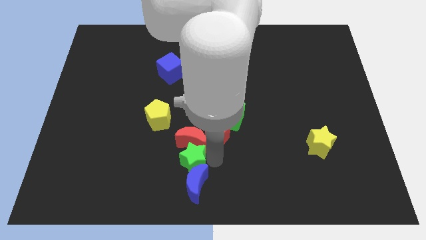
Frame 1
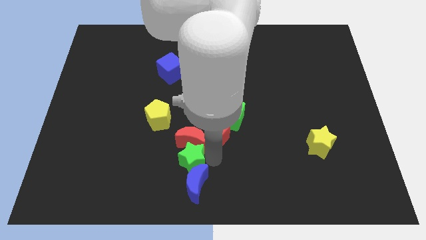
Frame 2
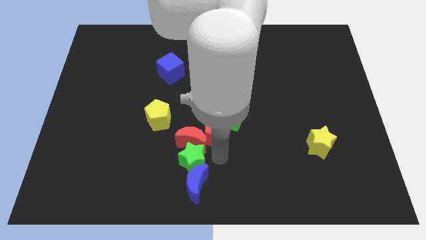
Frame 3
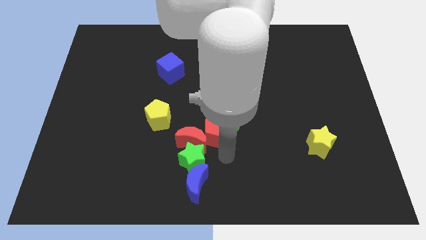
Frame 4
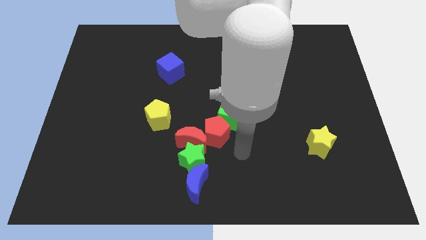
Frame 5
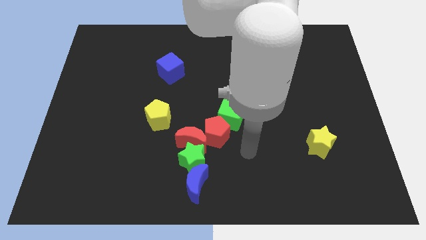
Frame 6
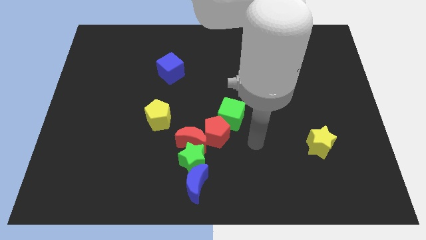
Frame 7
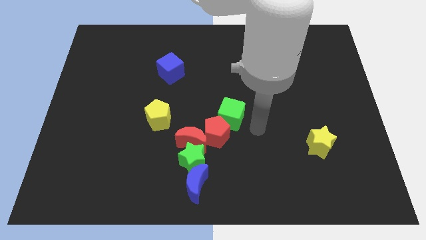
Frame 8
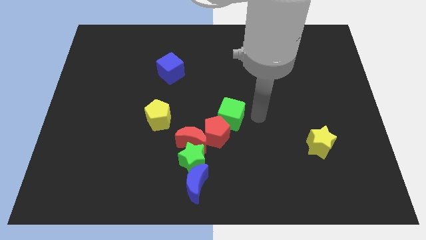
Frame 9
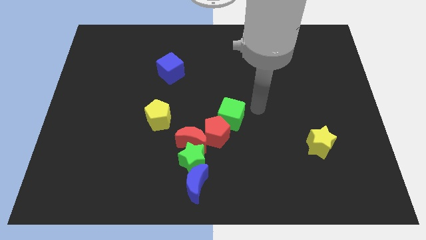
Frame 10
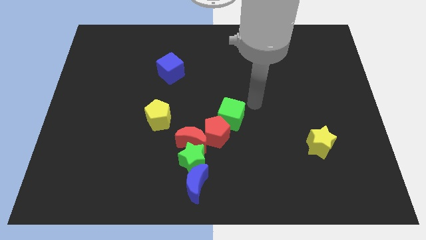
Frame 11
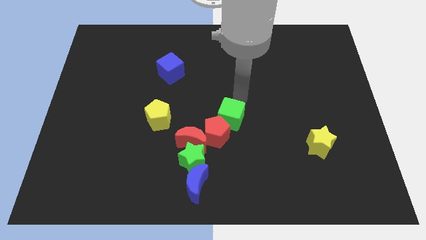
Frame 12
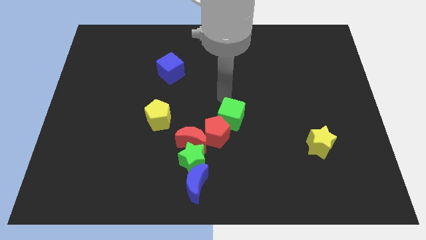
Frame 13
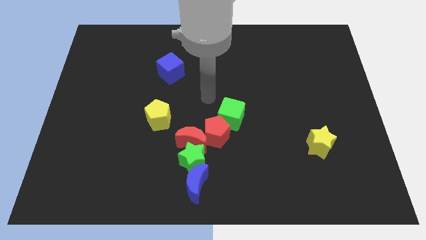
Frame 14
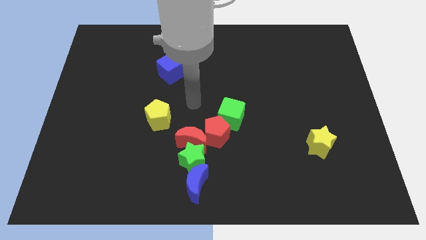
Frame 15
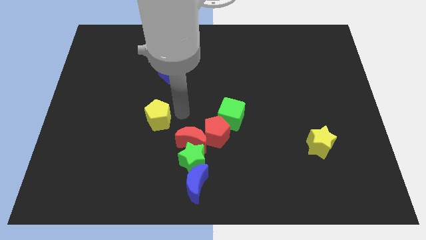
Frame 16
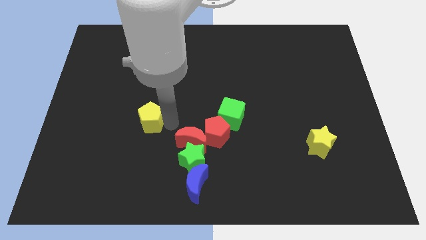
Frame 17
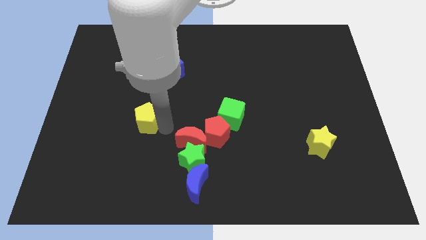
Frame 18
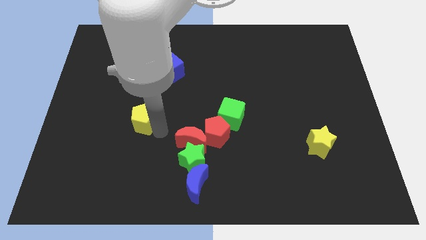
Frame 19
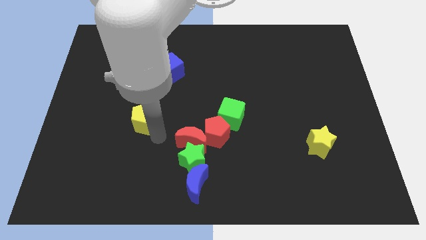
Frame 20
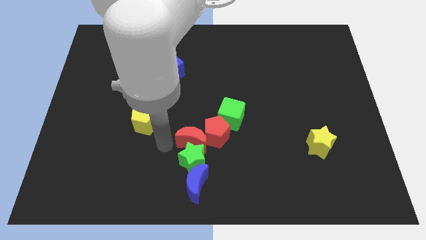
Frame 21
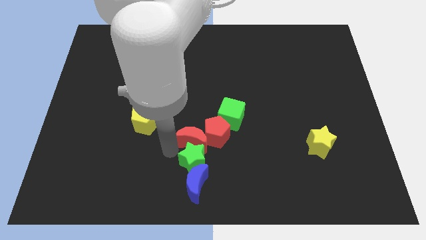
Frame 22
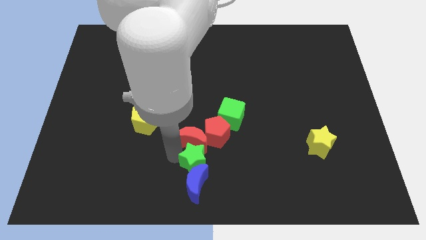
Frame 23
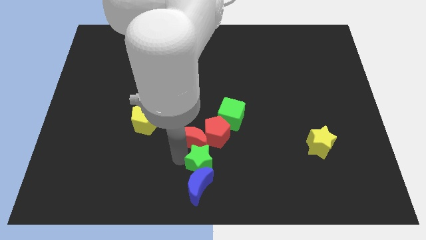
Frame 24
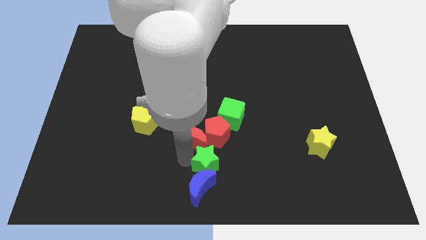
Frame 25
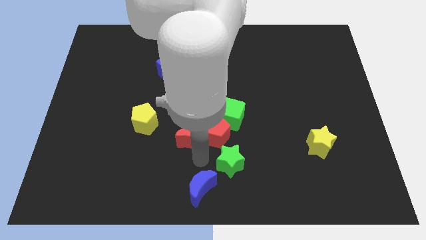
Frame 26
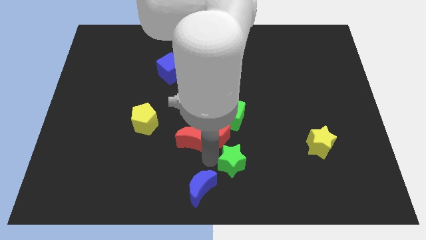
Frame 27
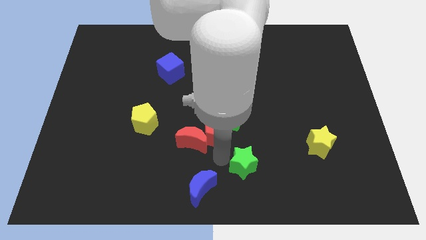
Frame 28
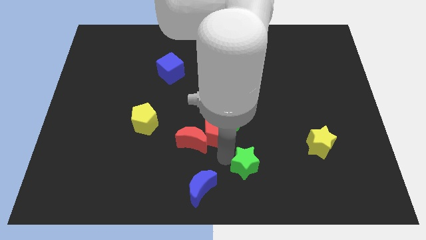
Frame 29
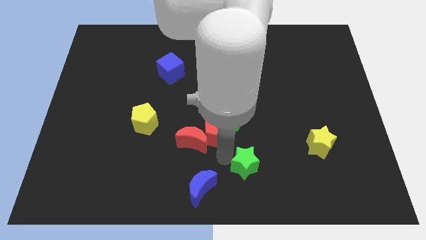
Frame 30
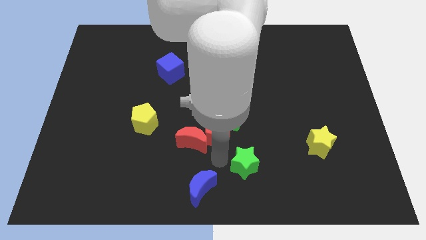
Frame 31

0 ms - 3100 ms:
move the green star away from the red and the blue moon

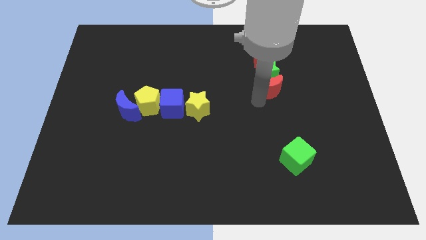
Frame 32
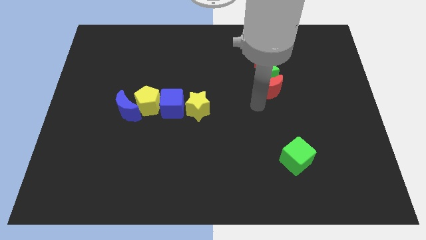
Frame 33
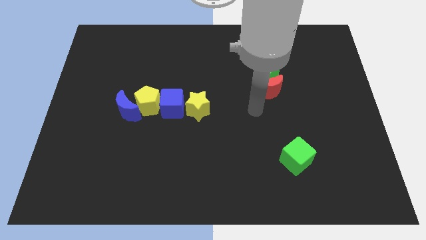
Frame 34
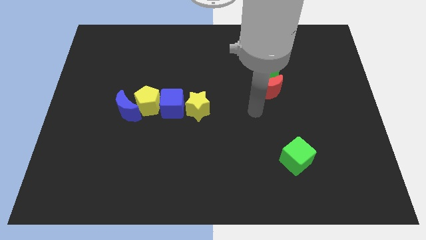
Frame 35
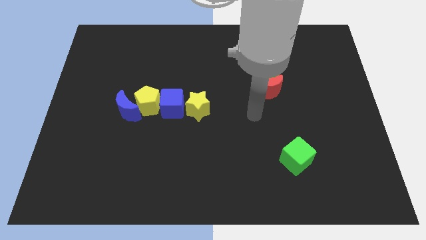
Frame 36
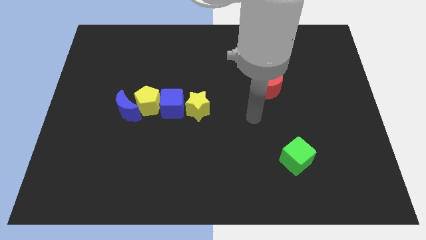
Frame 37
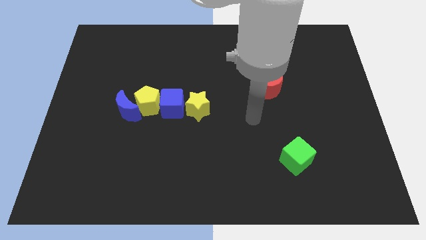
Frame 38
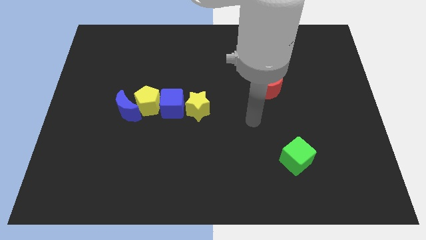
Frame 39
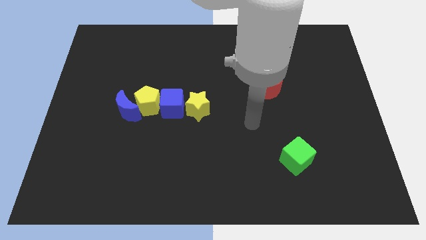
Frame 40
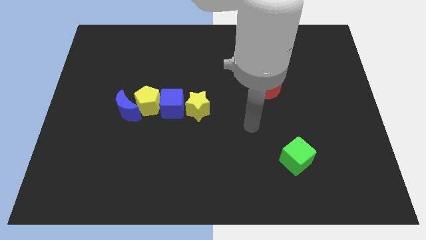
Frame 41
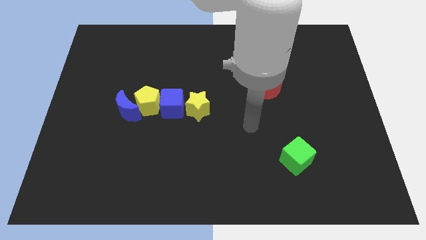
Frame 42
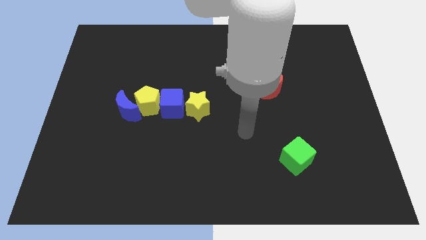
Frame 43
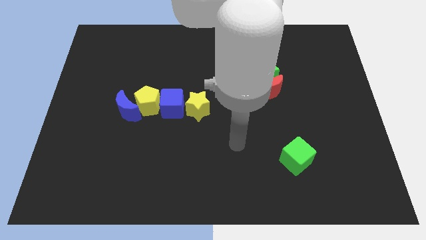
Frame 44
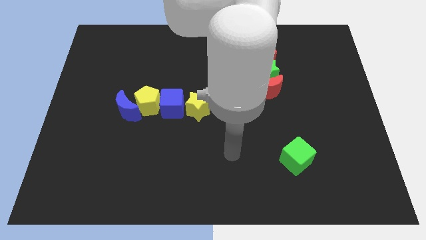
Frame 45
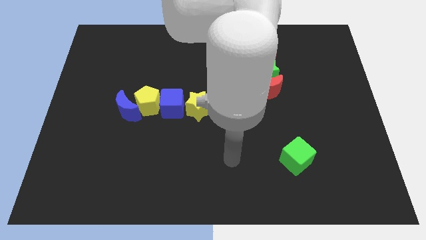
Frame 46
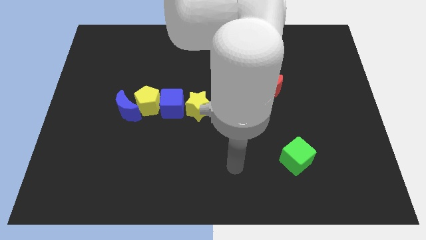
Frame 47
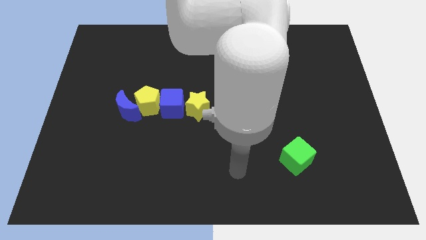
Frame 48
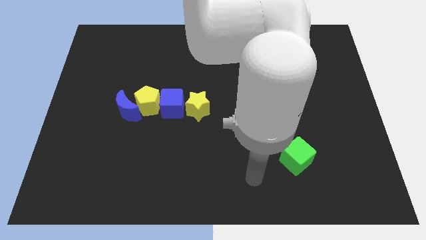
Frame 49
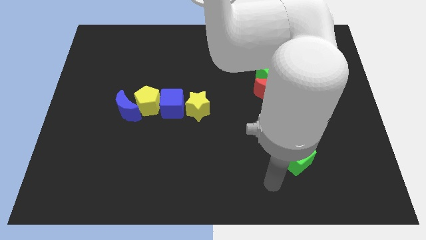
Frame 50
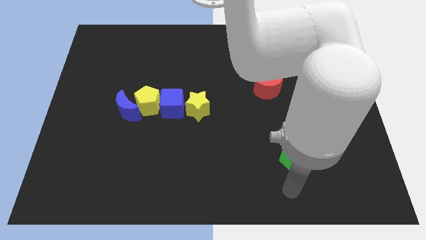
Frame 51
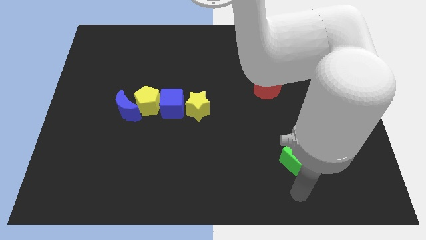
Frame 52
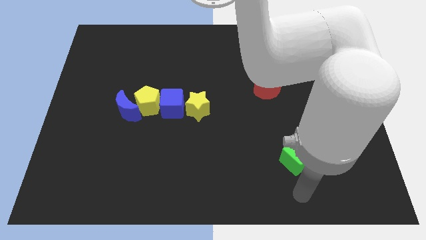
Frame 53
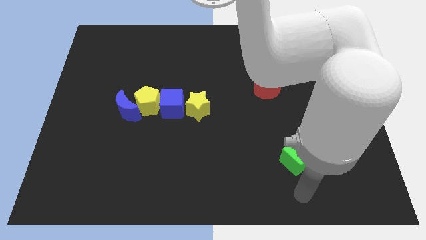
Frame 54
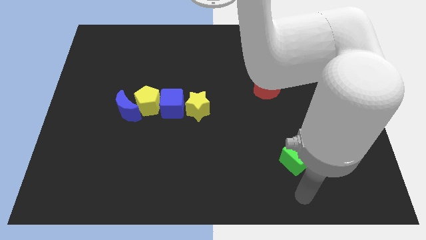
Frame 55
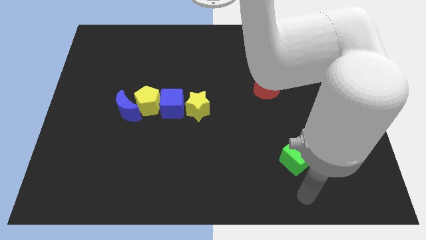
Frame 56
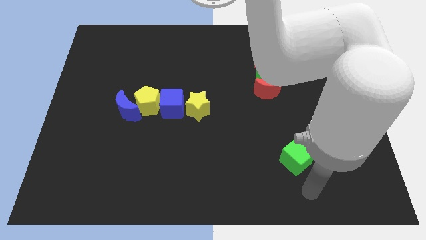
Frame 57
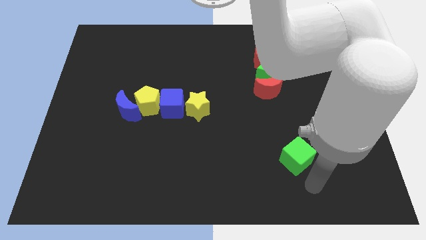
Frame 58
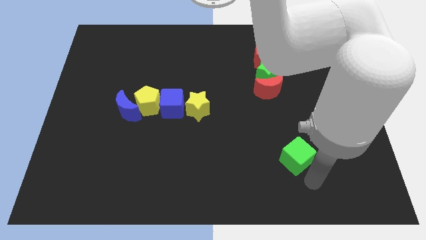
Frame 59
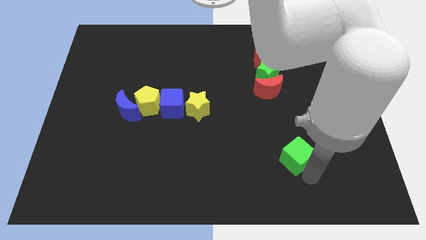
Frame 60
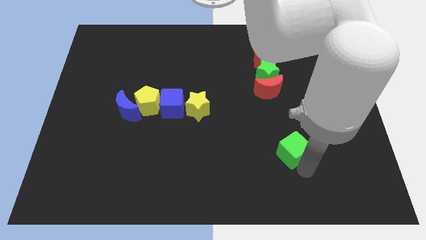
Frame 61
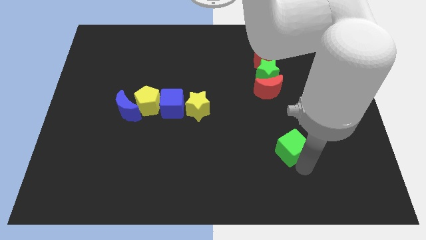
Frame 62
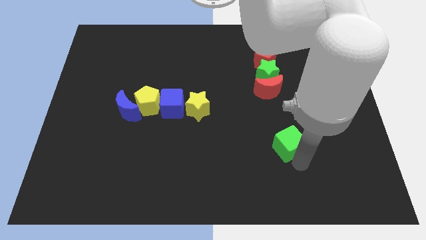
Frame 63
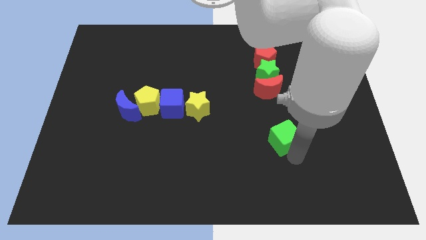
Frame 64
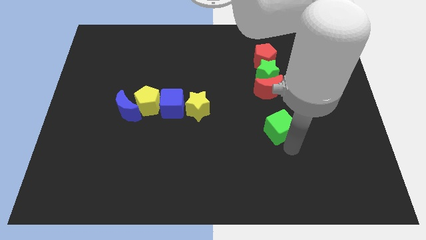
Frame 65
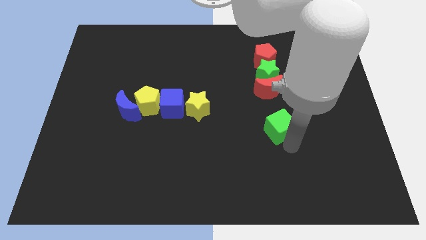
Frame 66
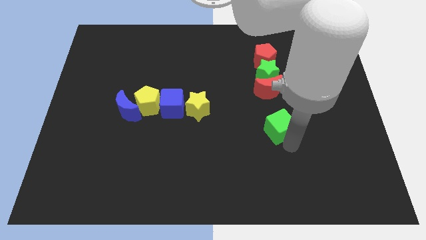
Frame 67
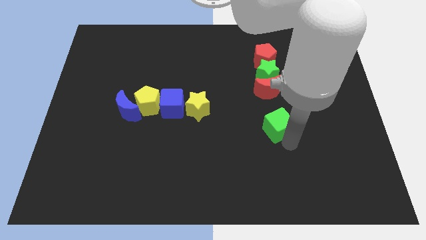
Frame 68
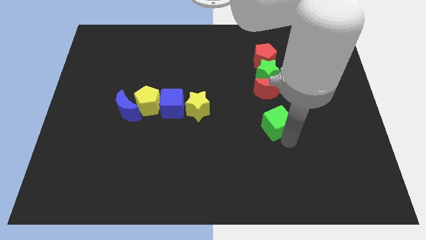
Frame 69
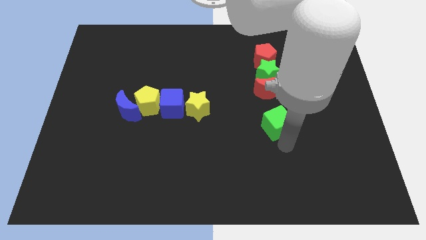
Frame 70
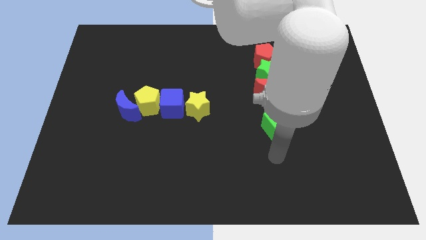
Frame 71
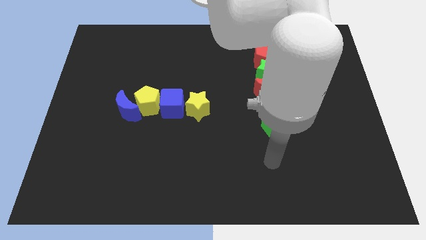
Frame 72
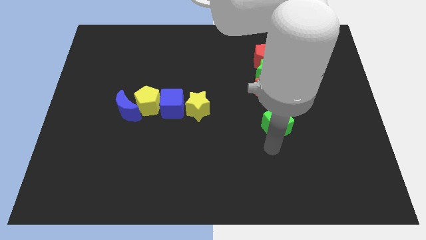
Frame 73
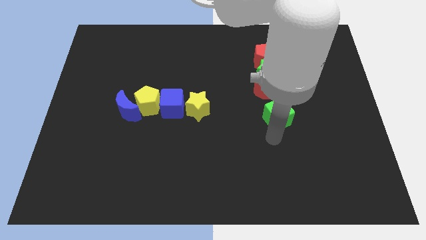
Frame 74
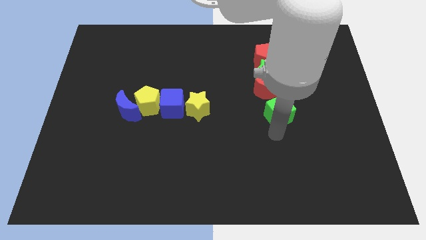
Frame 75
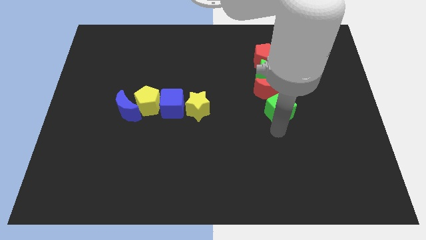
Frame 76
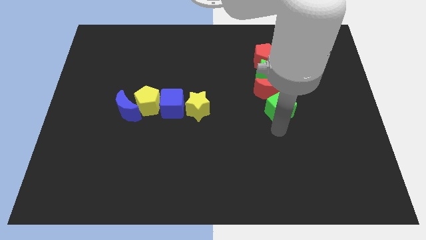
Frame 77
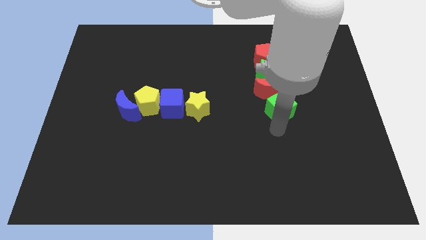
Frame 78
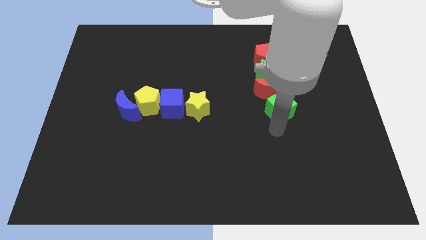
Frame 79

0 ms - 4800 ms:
move the green cube towards the bottom side of the red moon

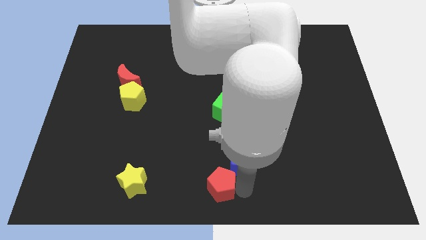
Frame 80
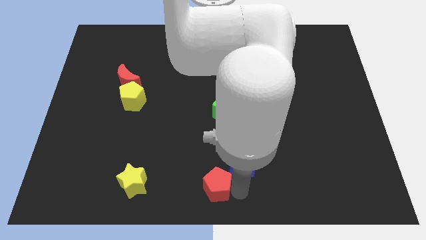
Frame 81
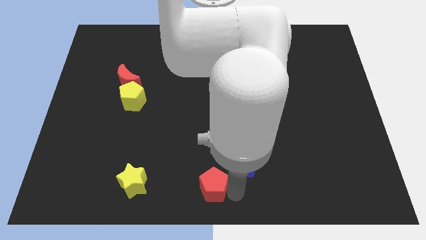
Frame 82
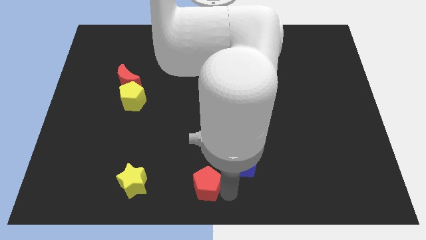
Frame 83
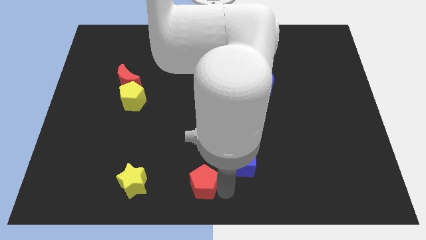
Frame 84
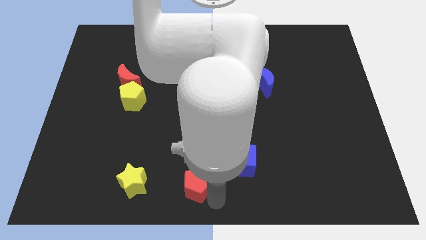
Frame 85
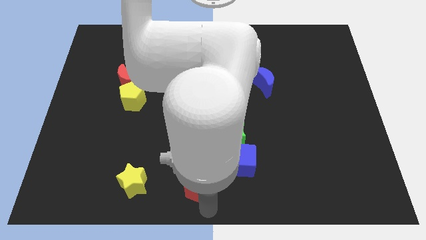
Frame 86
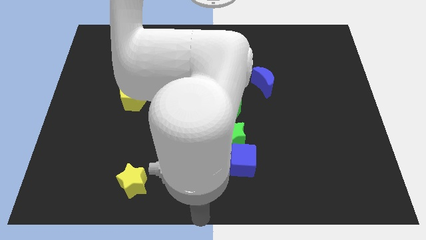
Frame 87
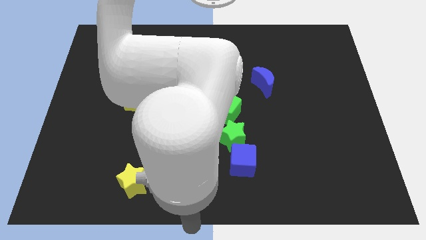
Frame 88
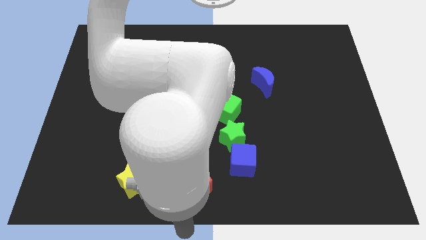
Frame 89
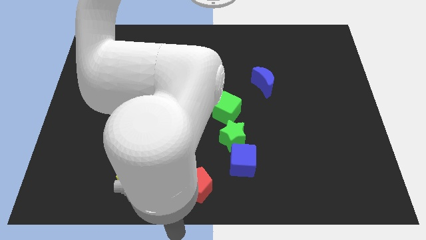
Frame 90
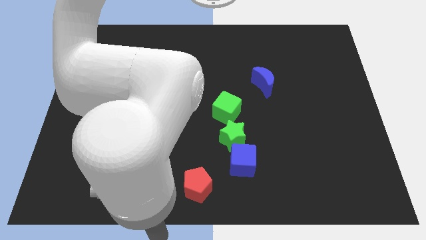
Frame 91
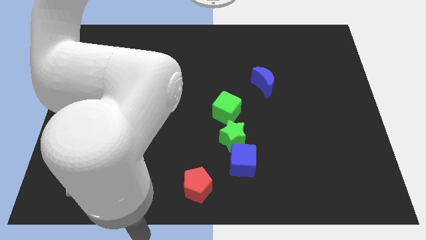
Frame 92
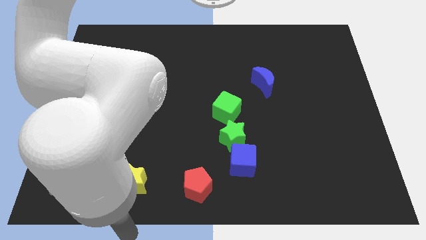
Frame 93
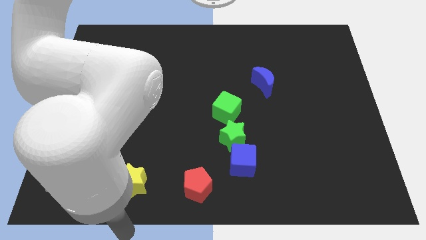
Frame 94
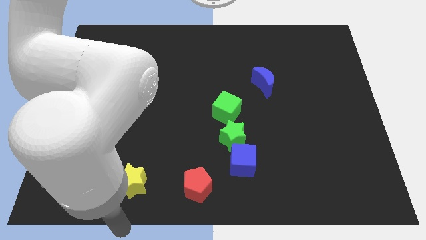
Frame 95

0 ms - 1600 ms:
place the red pentagon to the right of the yellow star
